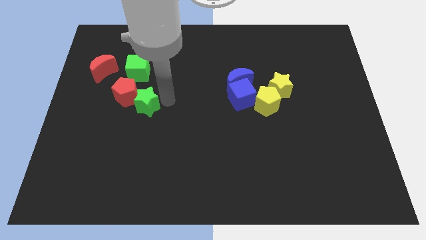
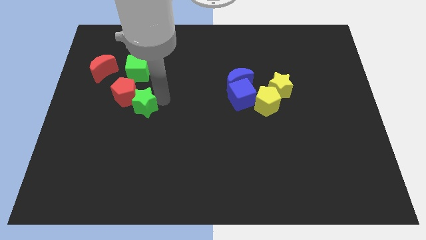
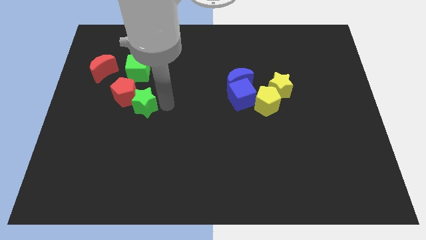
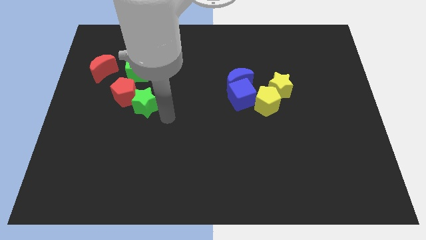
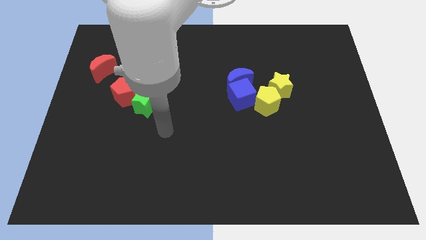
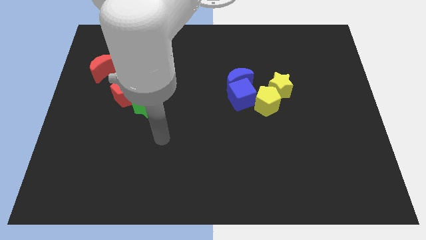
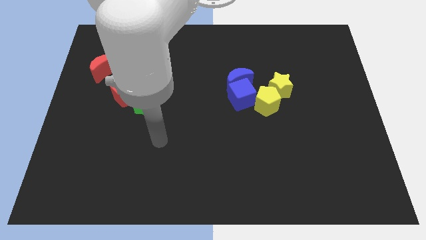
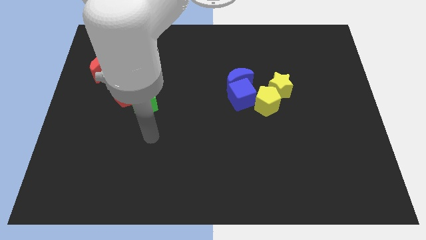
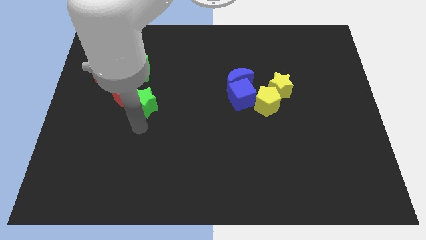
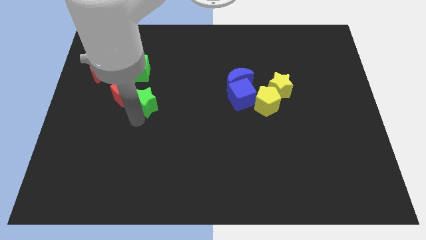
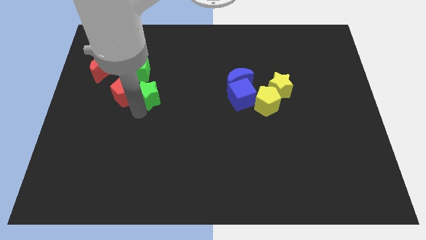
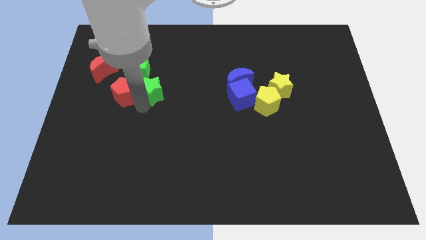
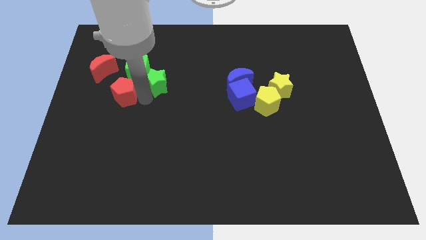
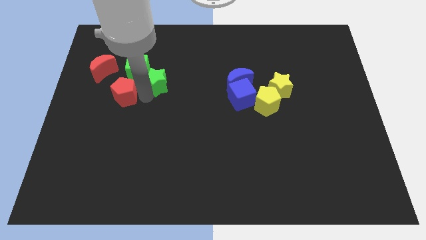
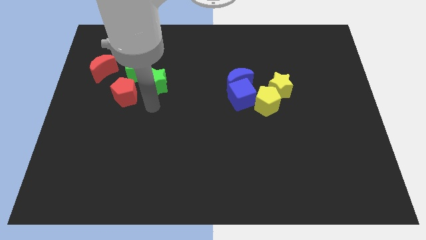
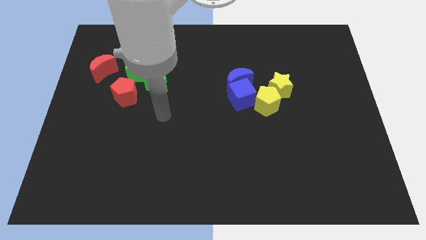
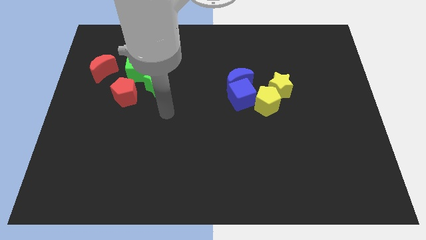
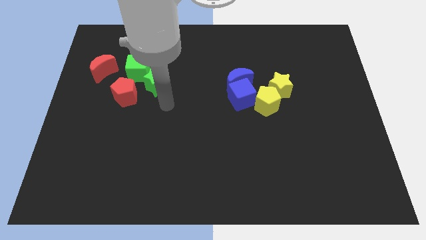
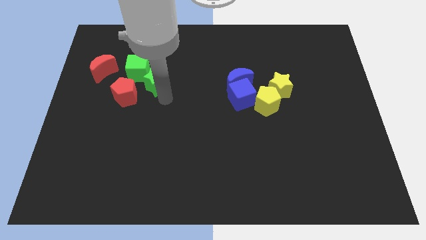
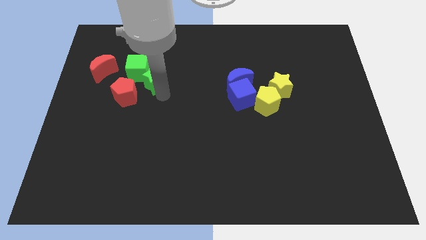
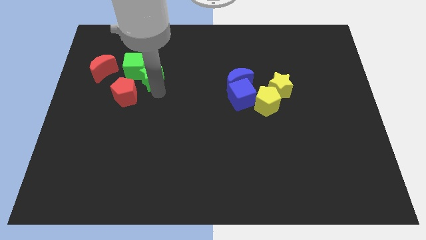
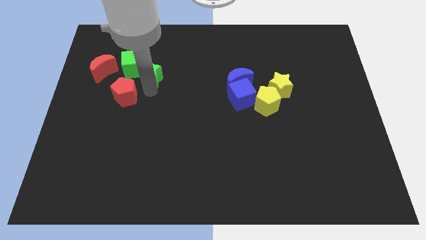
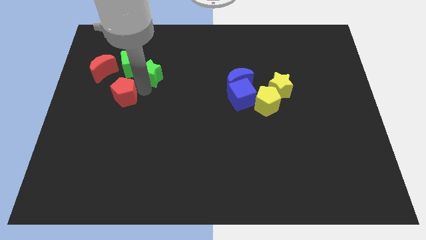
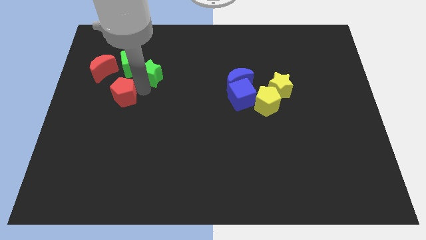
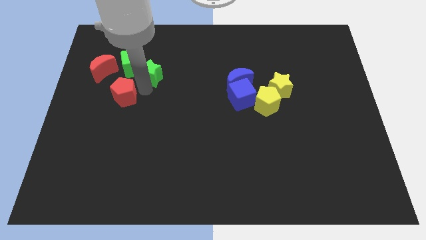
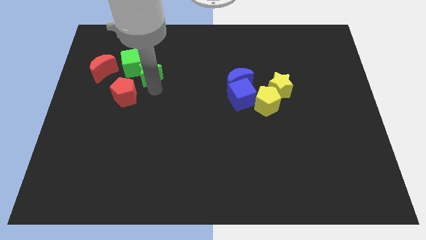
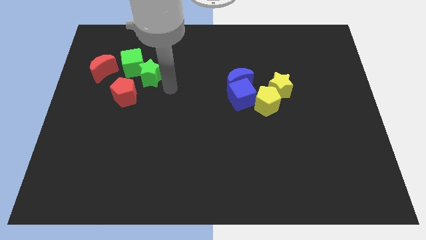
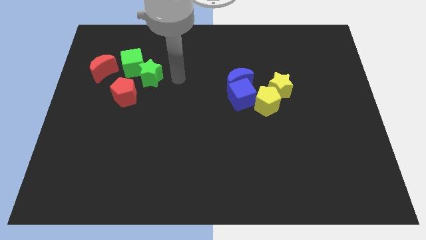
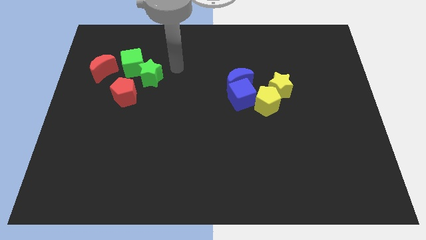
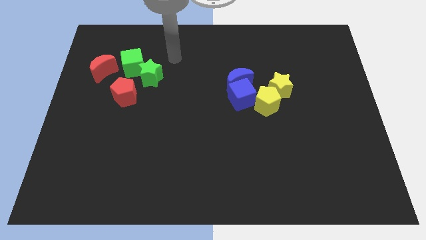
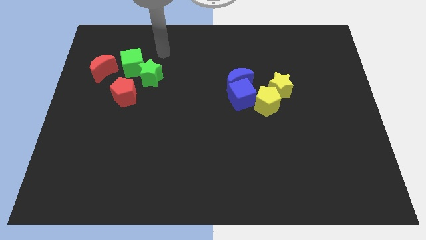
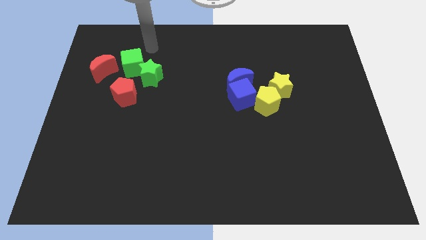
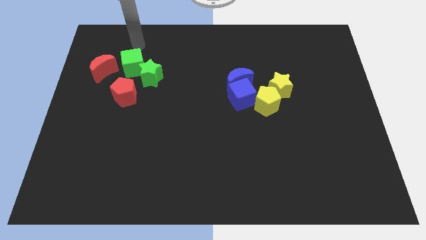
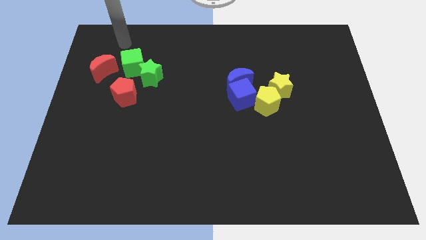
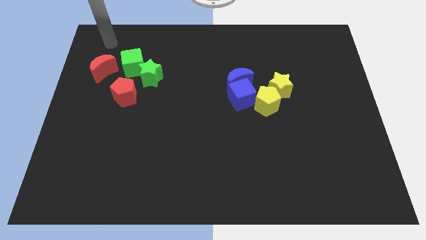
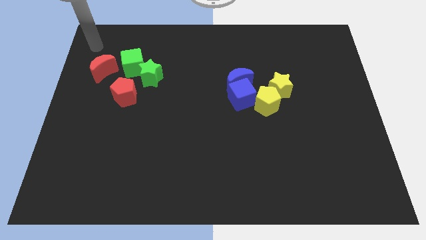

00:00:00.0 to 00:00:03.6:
place the green star below the green cube

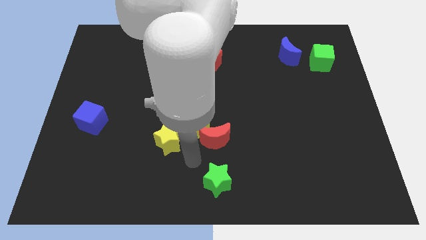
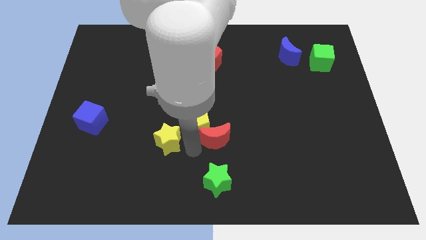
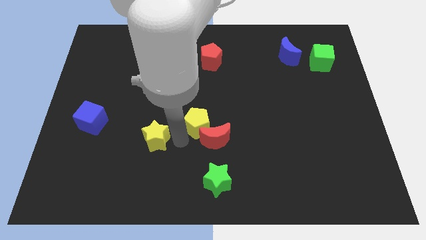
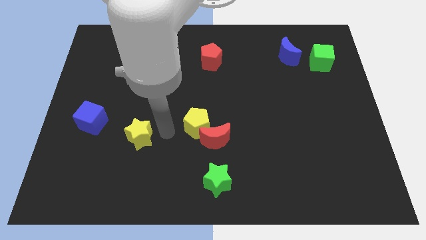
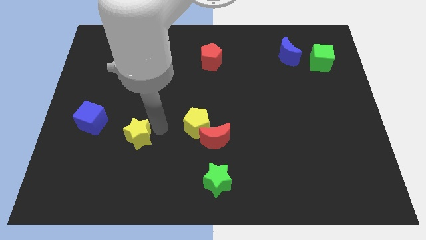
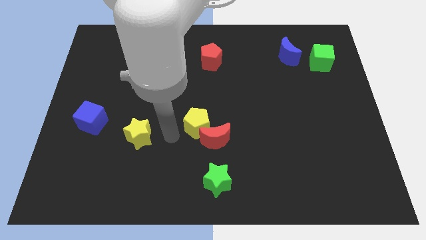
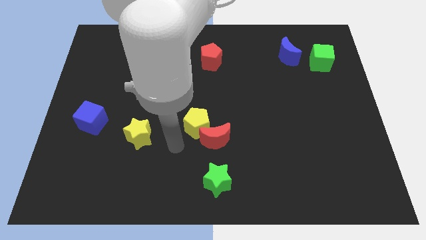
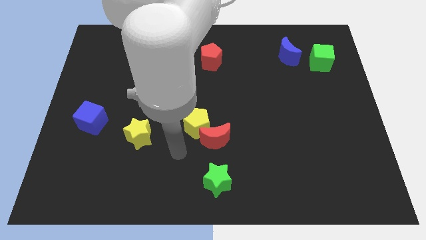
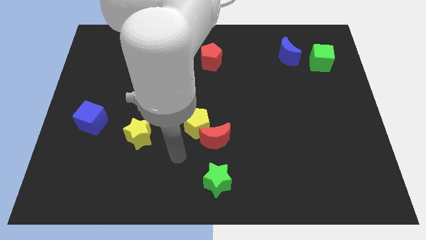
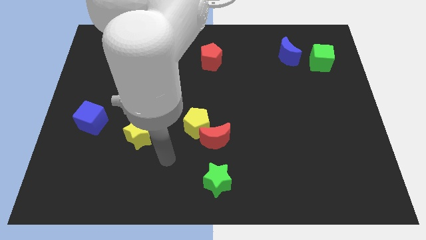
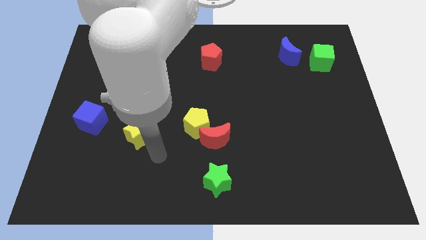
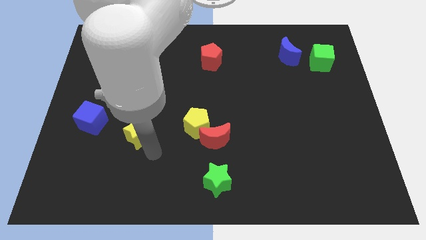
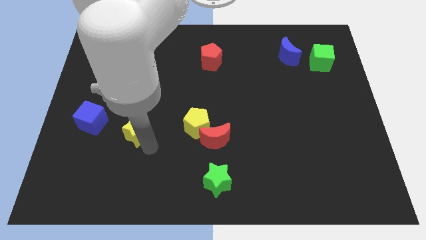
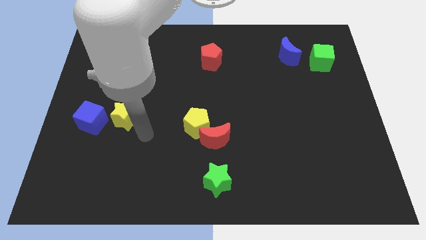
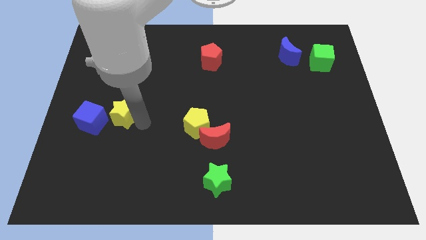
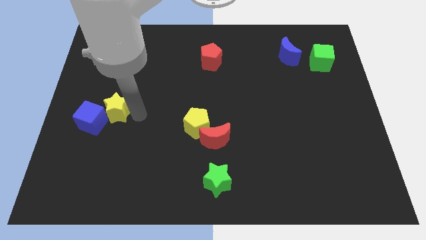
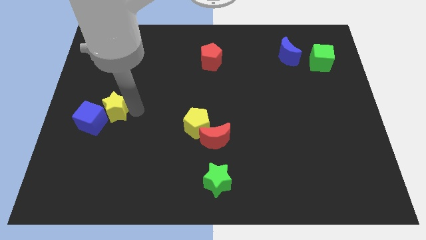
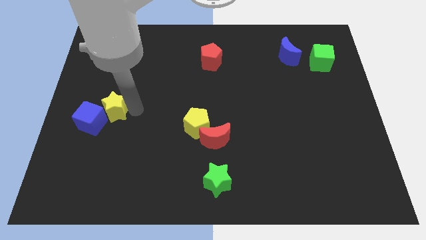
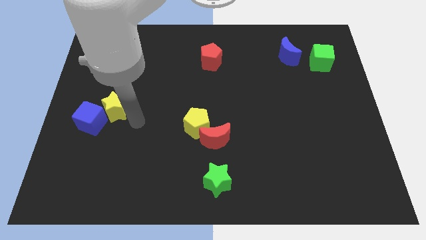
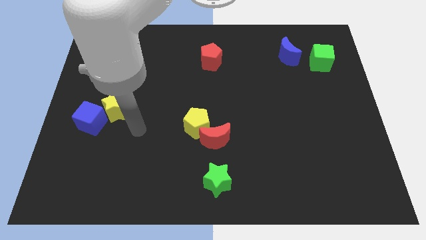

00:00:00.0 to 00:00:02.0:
push the yellow star into the blue cube

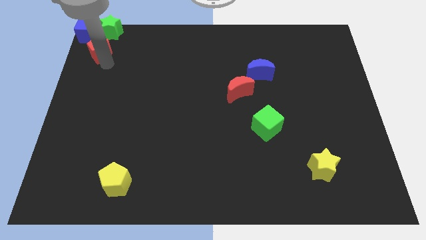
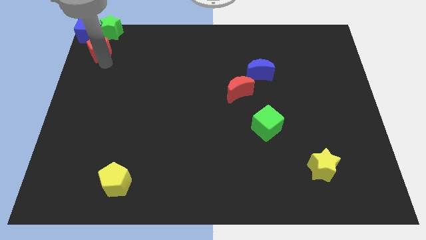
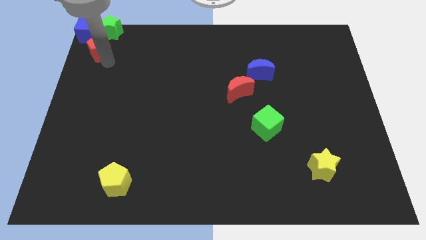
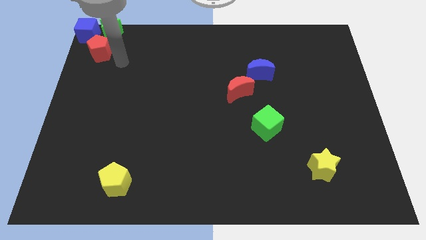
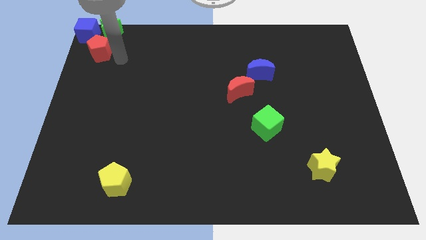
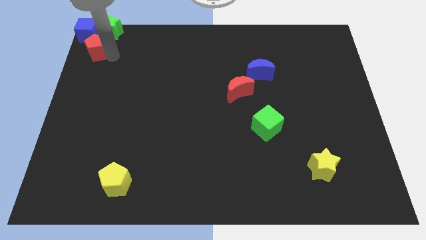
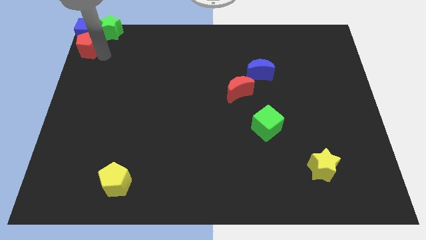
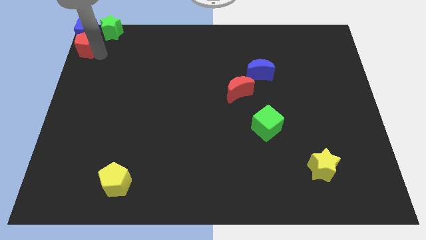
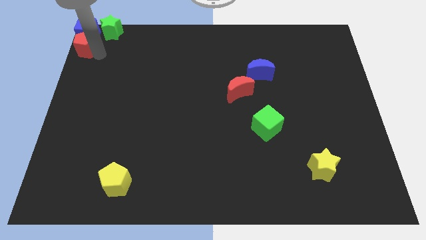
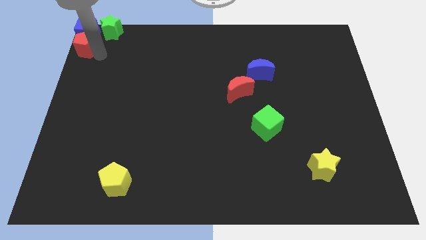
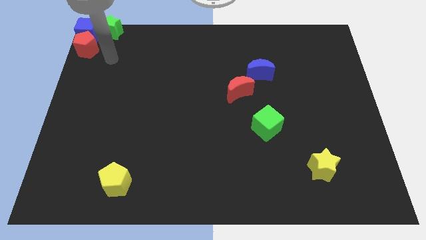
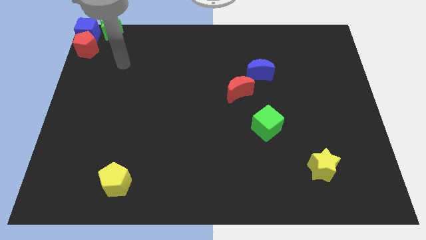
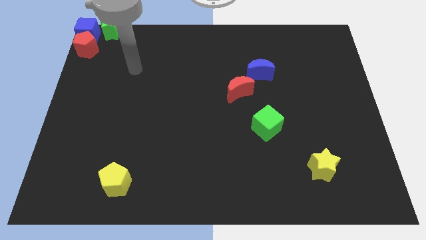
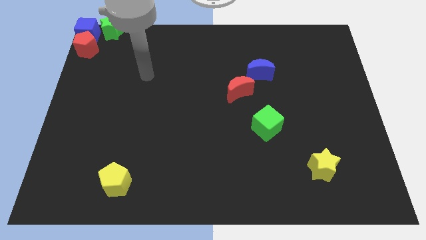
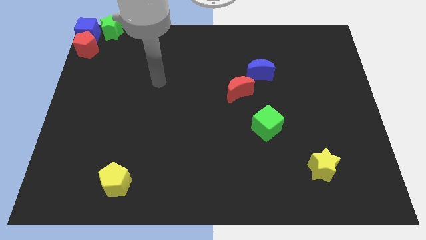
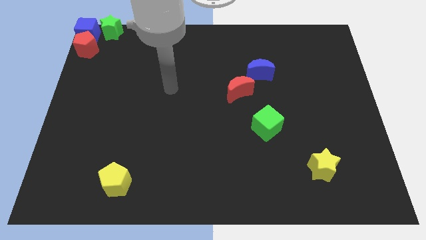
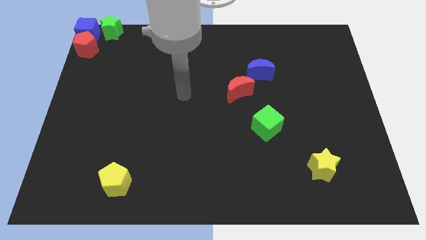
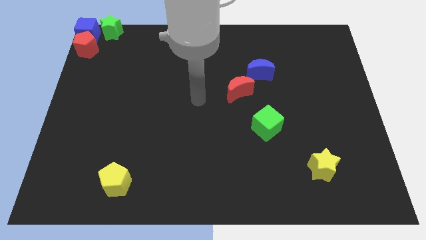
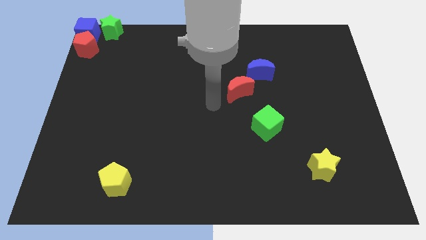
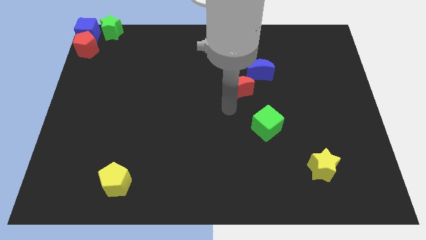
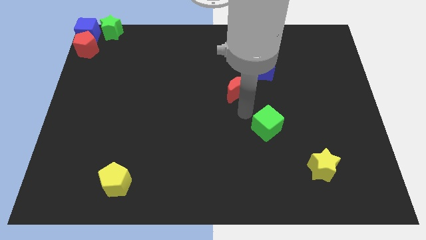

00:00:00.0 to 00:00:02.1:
place your arm in between the red moon and the green cube

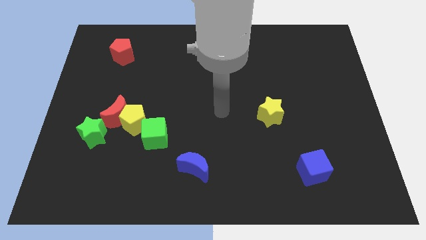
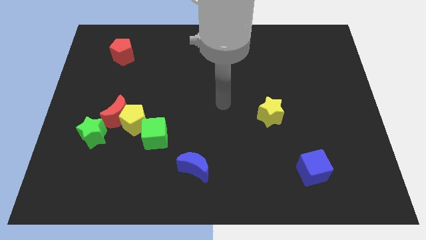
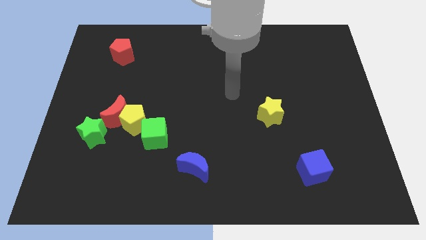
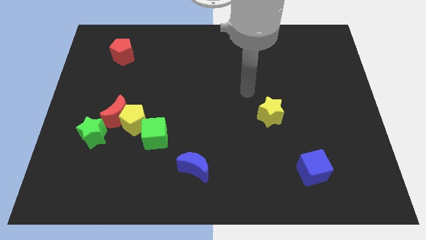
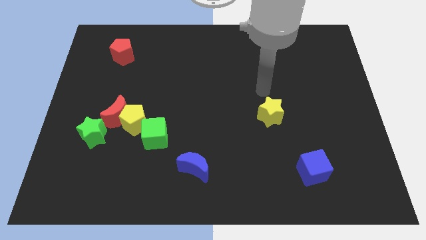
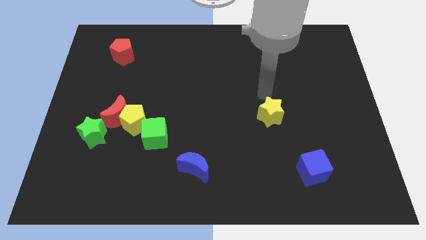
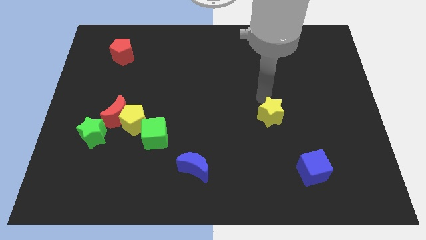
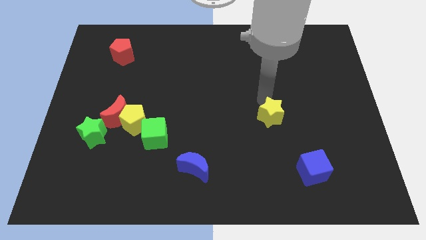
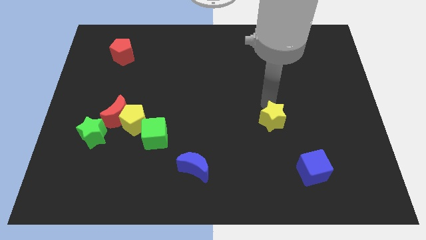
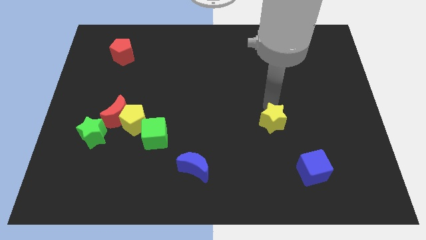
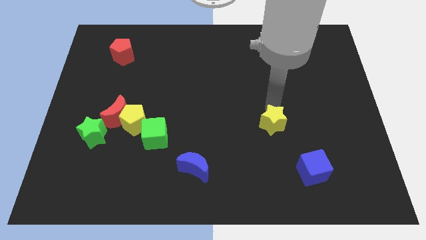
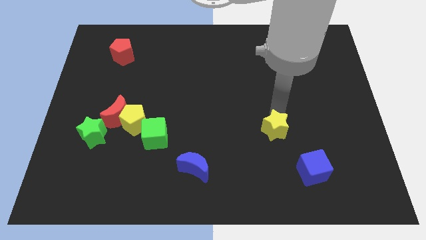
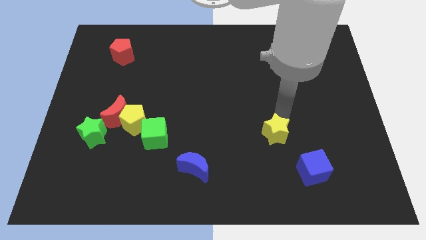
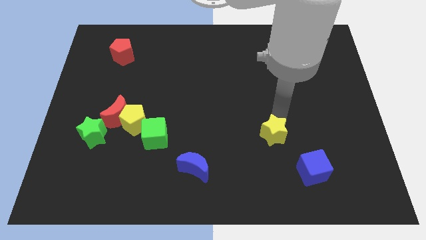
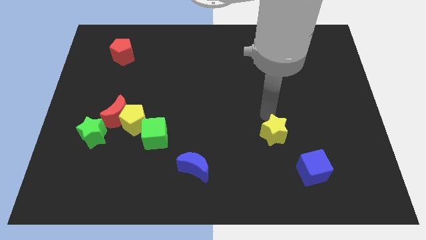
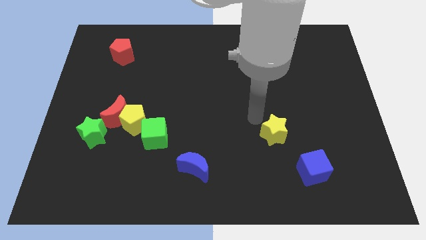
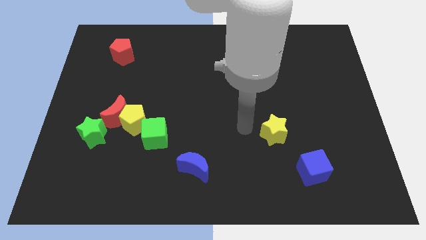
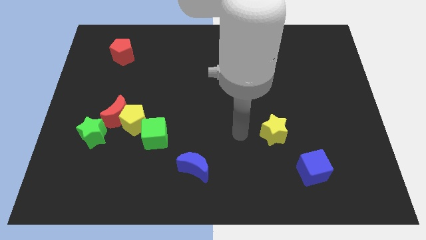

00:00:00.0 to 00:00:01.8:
push the yellow star slightly to the bottom
